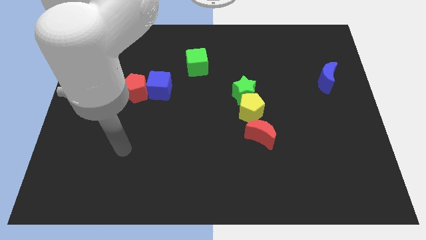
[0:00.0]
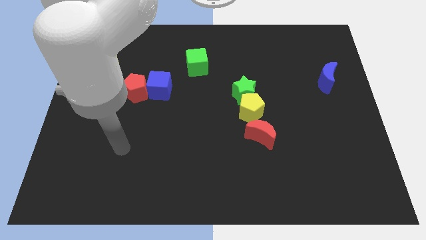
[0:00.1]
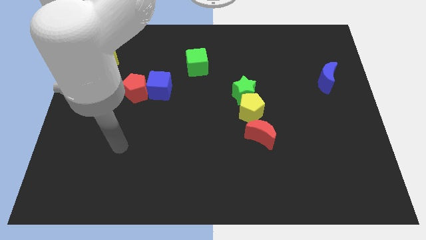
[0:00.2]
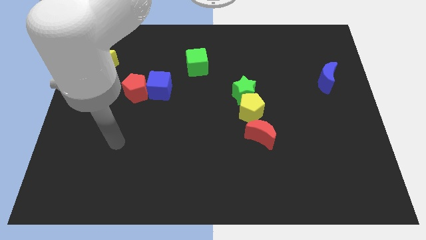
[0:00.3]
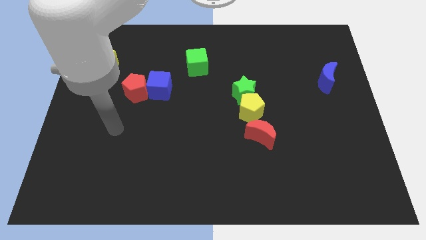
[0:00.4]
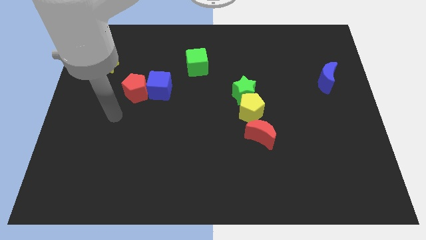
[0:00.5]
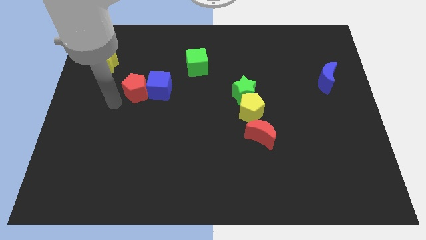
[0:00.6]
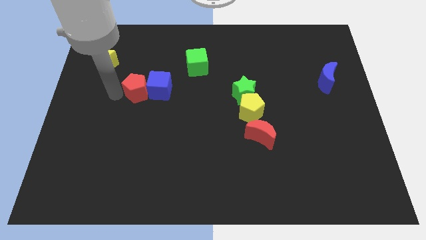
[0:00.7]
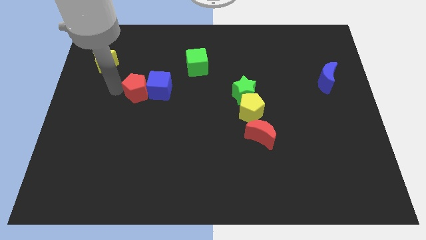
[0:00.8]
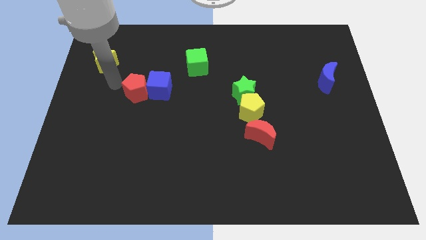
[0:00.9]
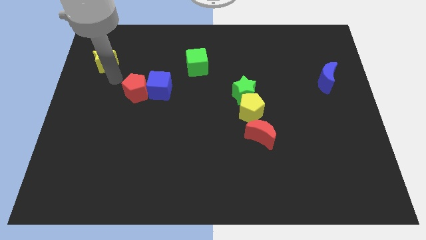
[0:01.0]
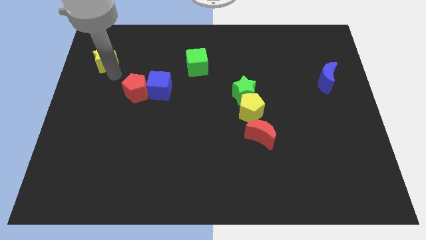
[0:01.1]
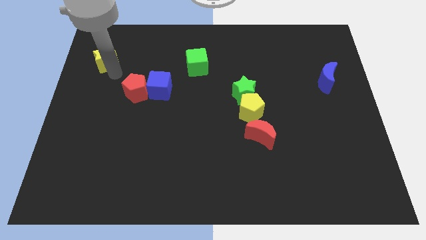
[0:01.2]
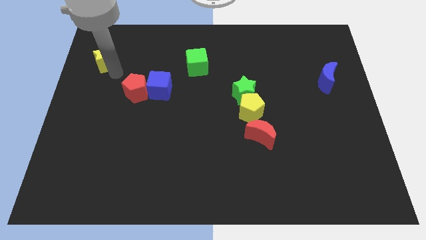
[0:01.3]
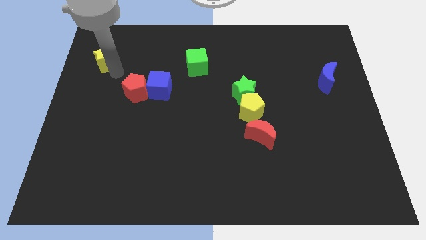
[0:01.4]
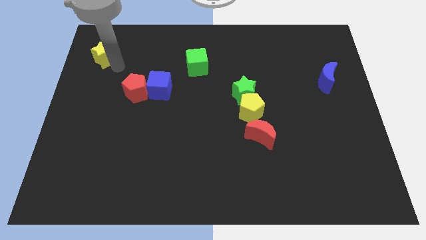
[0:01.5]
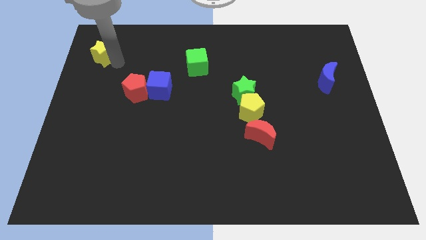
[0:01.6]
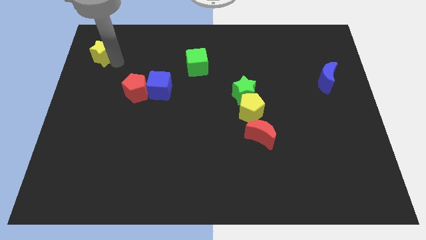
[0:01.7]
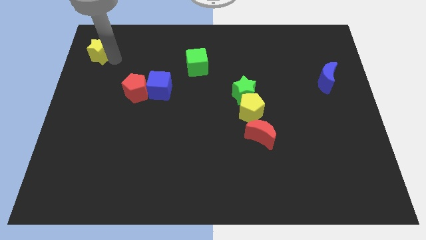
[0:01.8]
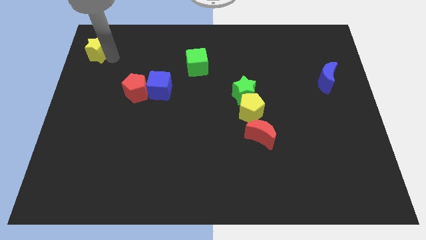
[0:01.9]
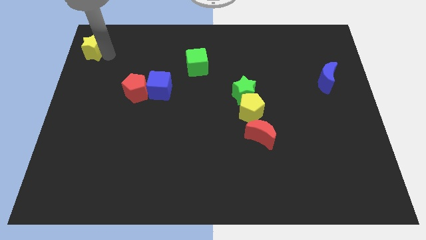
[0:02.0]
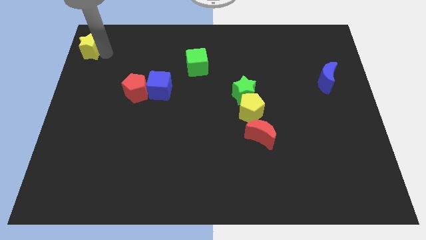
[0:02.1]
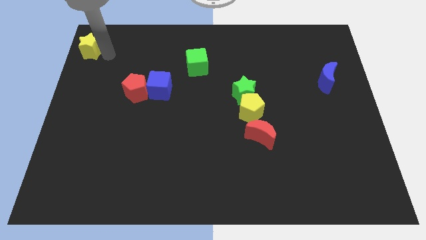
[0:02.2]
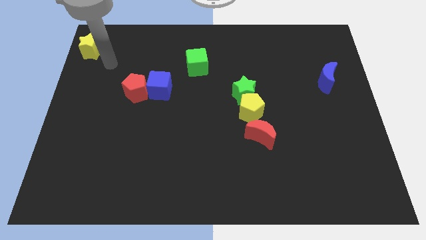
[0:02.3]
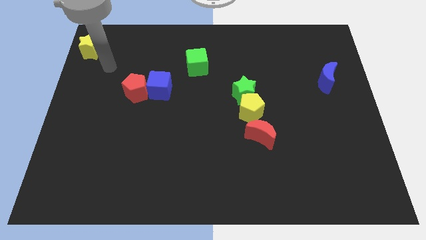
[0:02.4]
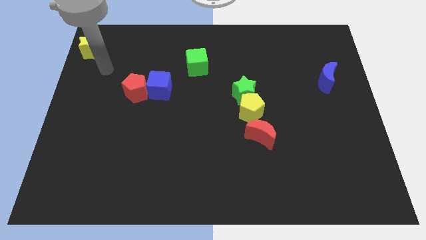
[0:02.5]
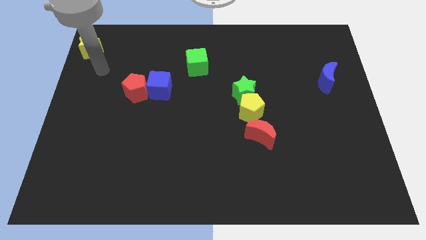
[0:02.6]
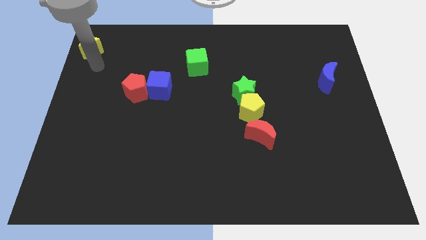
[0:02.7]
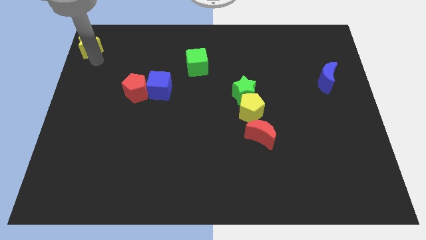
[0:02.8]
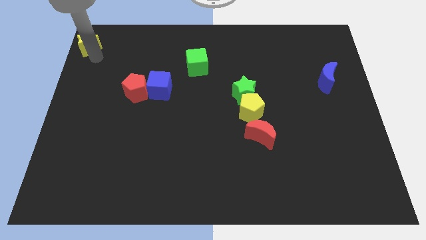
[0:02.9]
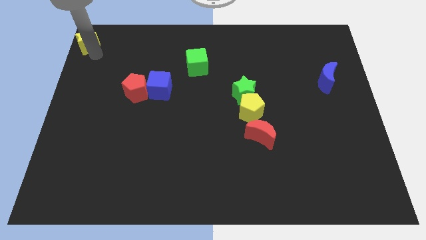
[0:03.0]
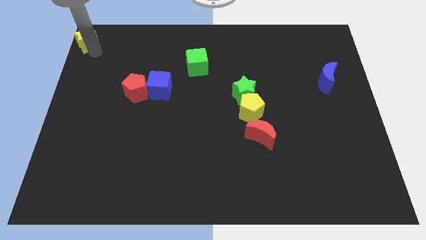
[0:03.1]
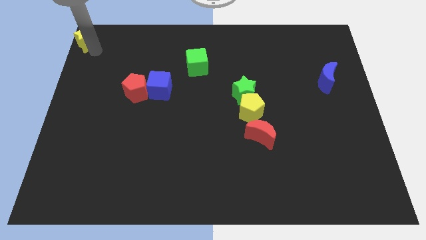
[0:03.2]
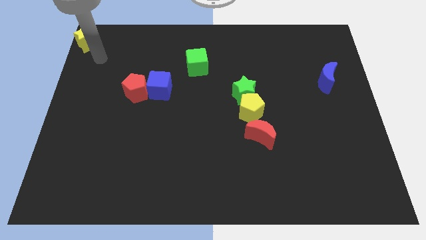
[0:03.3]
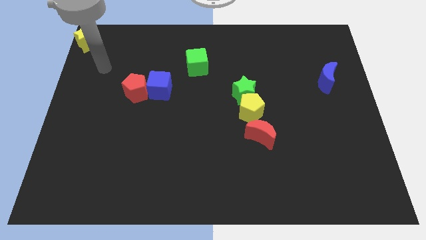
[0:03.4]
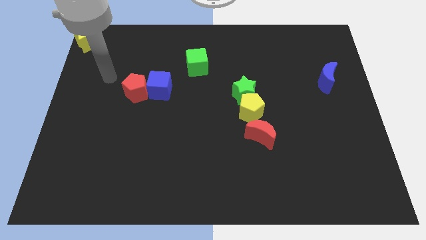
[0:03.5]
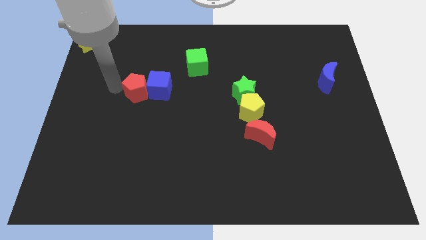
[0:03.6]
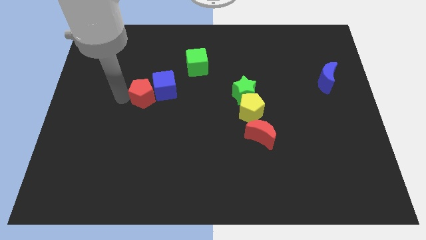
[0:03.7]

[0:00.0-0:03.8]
place yellow star to the top left corner of the board

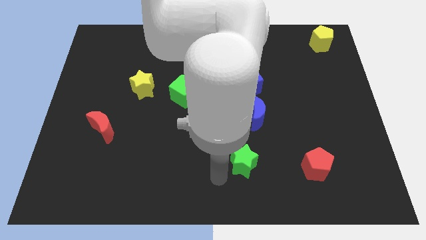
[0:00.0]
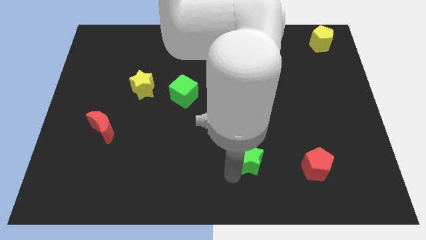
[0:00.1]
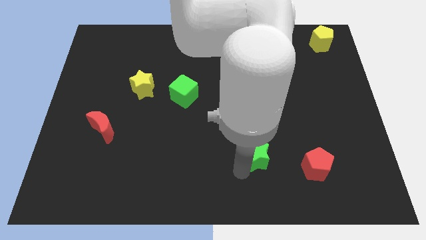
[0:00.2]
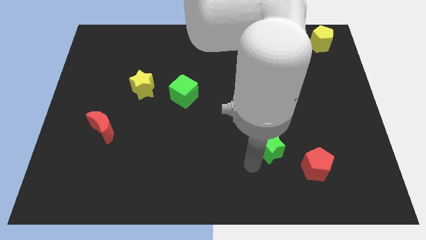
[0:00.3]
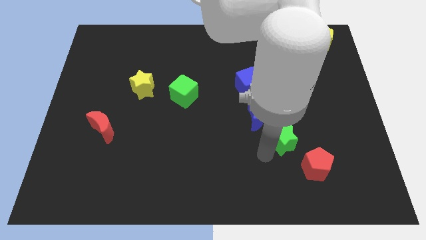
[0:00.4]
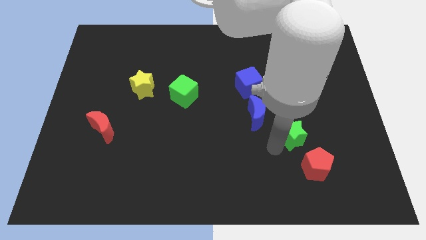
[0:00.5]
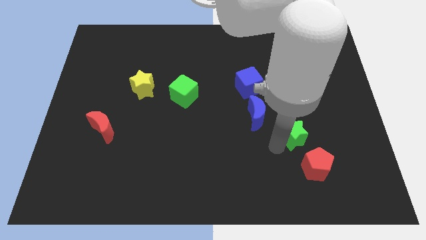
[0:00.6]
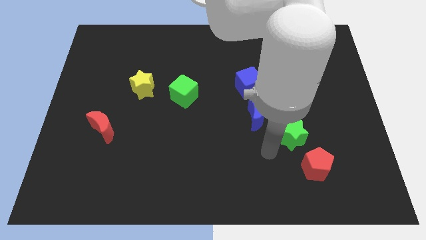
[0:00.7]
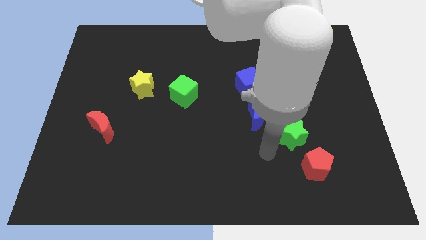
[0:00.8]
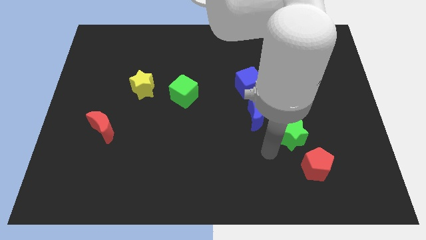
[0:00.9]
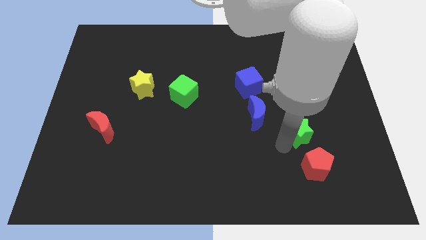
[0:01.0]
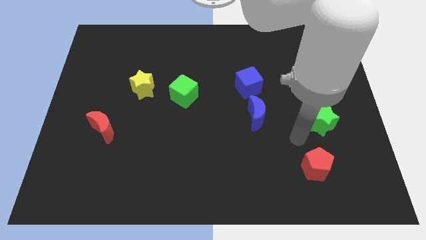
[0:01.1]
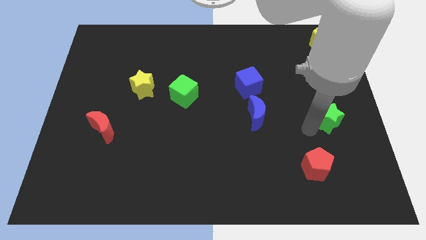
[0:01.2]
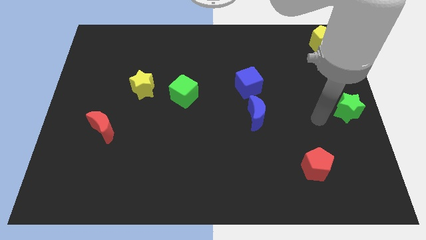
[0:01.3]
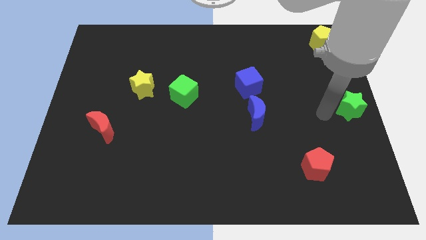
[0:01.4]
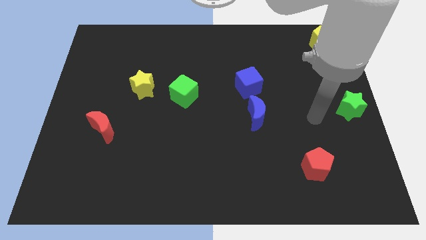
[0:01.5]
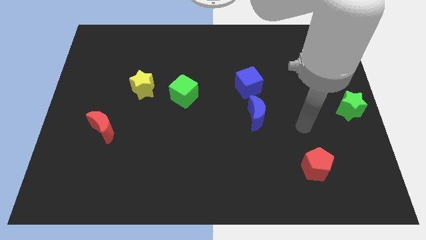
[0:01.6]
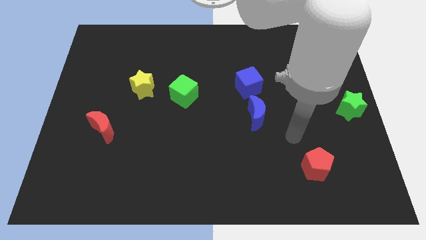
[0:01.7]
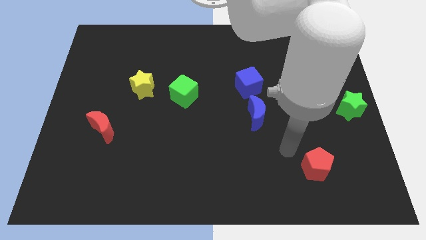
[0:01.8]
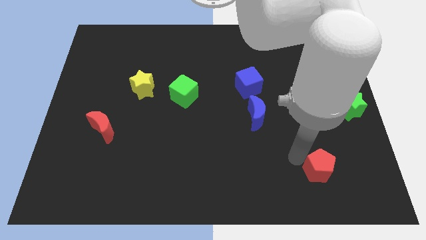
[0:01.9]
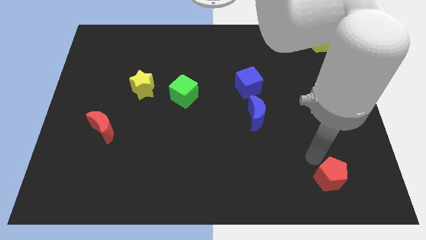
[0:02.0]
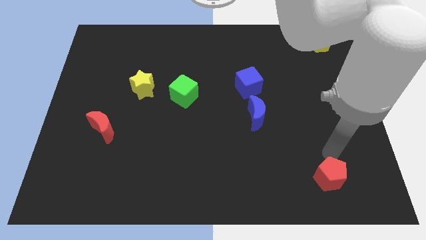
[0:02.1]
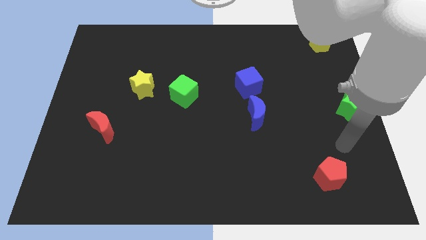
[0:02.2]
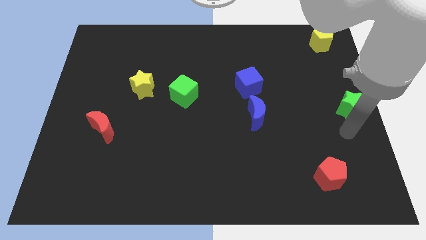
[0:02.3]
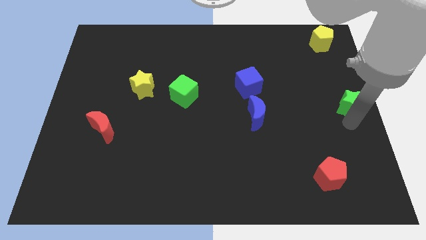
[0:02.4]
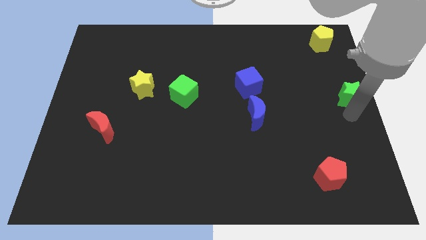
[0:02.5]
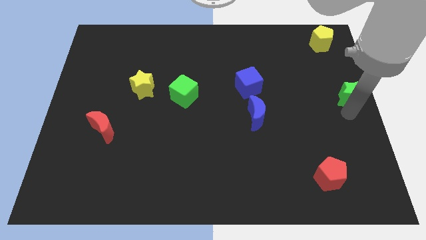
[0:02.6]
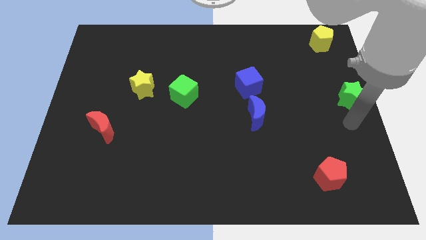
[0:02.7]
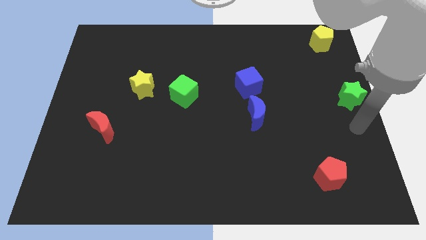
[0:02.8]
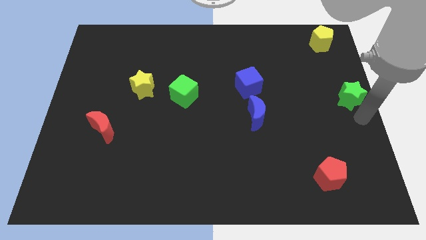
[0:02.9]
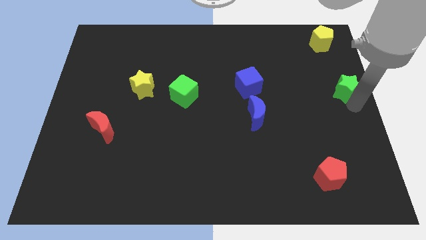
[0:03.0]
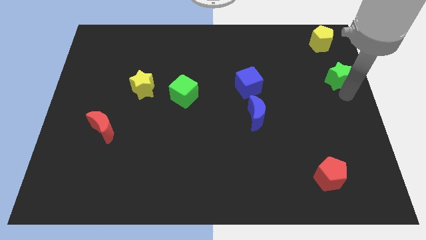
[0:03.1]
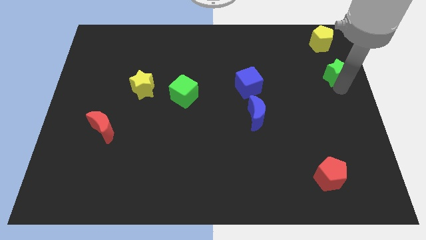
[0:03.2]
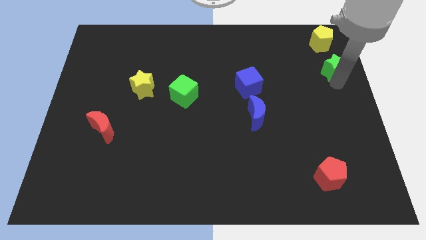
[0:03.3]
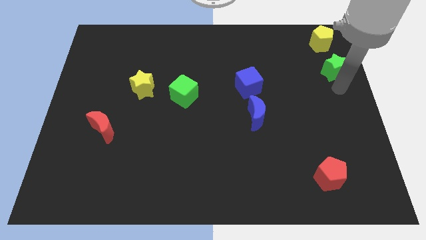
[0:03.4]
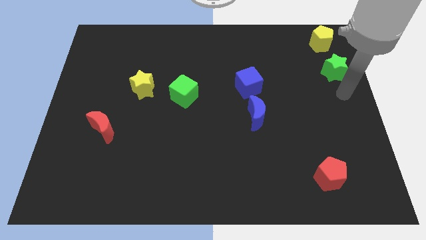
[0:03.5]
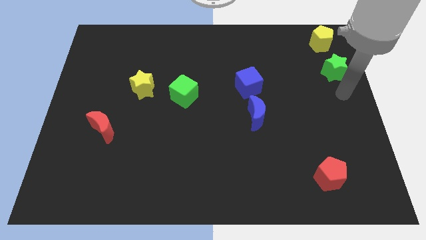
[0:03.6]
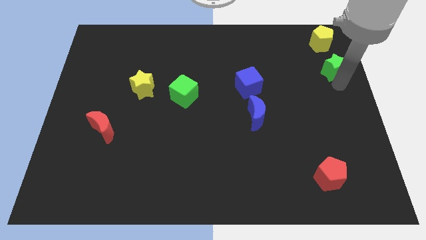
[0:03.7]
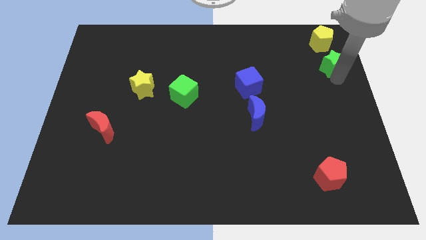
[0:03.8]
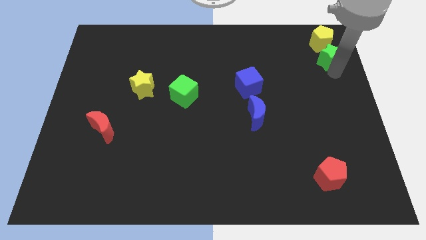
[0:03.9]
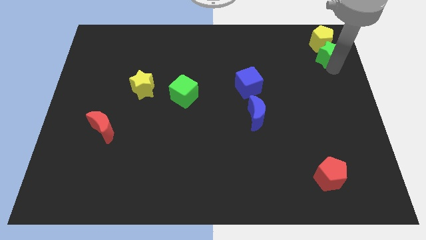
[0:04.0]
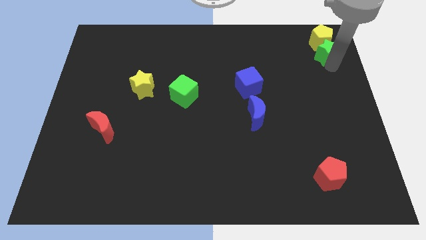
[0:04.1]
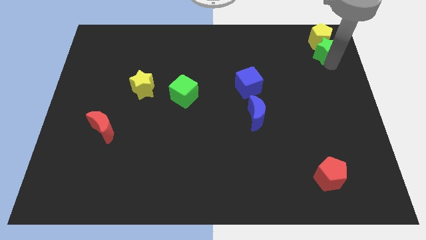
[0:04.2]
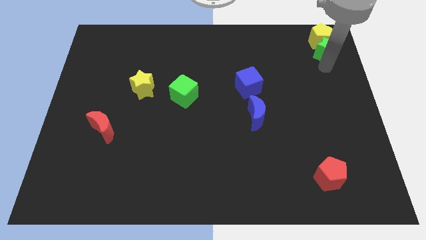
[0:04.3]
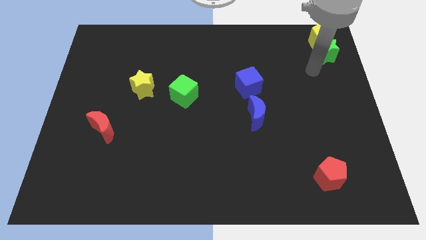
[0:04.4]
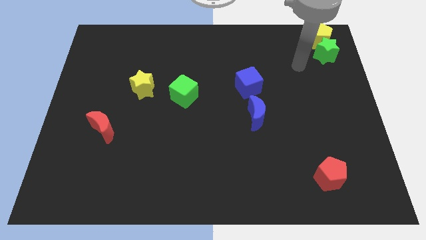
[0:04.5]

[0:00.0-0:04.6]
move the green star close to the yellow pentagon

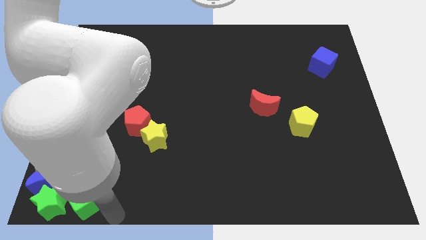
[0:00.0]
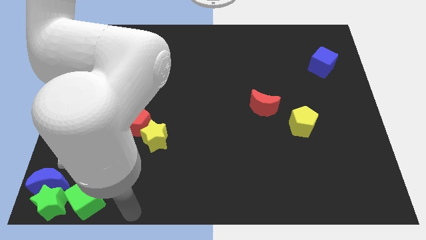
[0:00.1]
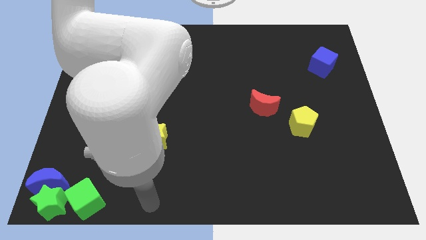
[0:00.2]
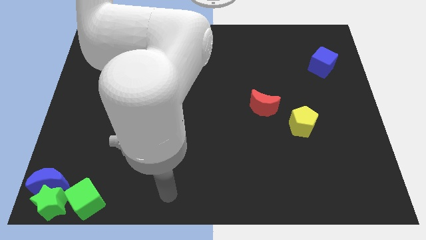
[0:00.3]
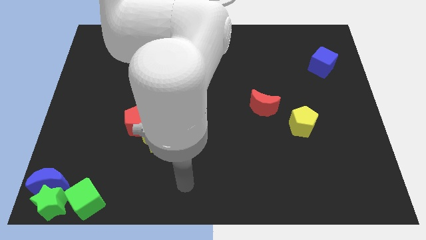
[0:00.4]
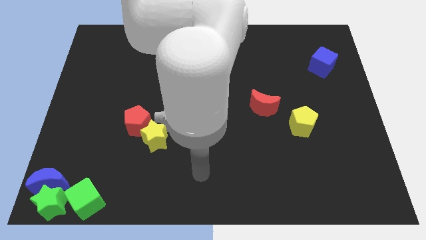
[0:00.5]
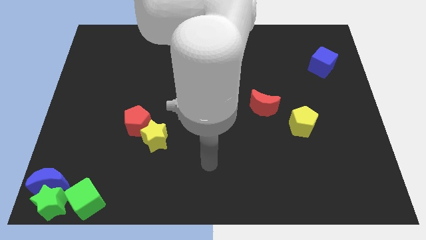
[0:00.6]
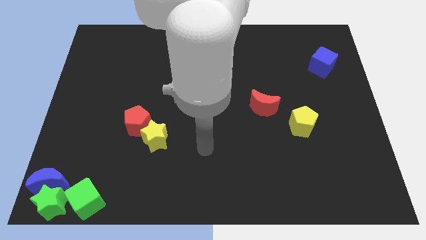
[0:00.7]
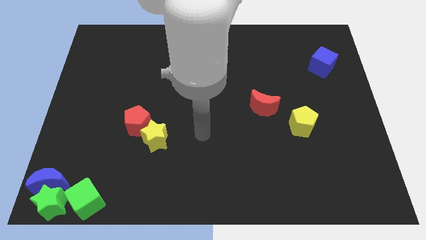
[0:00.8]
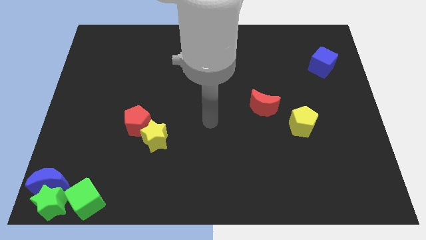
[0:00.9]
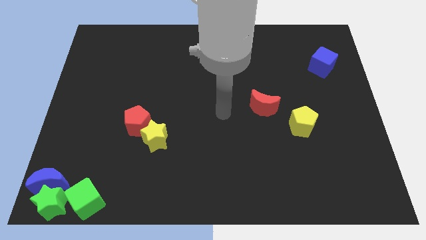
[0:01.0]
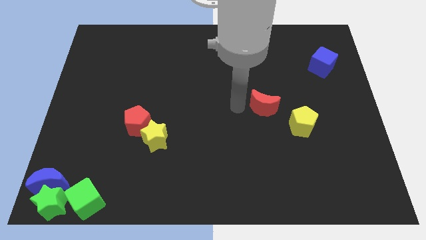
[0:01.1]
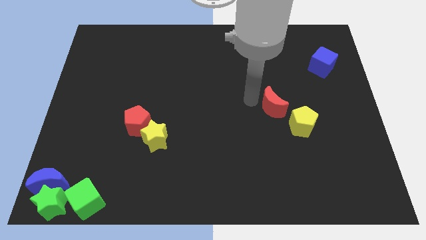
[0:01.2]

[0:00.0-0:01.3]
place your arm to the left side of red moon
